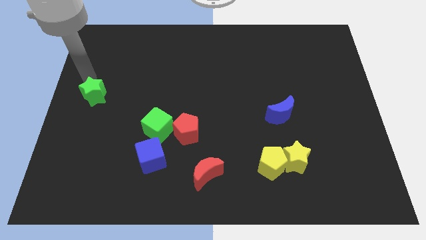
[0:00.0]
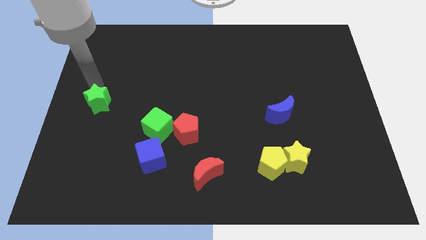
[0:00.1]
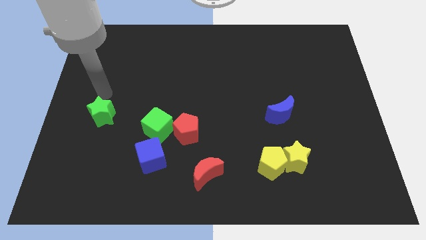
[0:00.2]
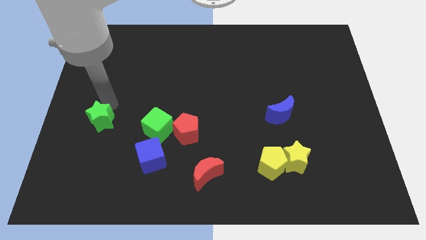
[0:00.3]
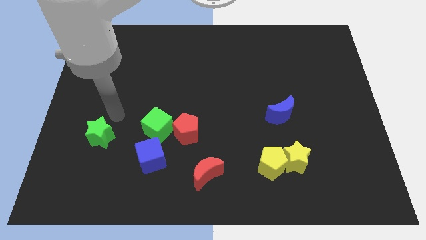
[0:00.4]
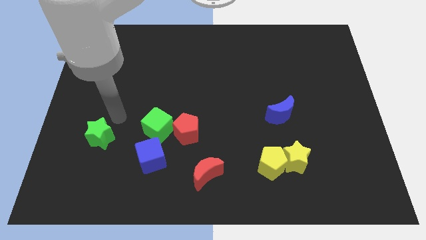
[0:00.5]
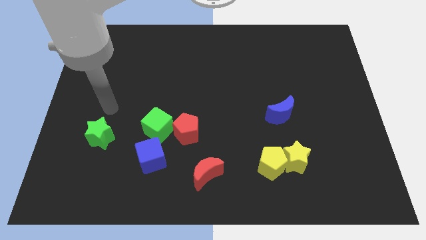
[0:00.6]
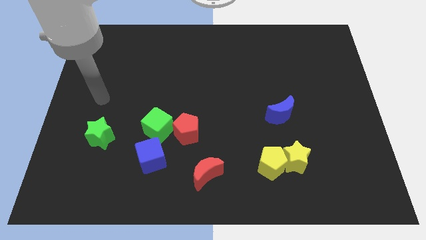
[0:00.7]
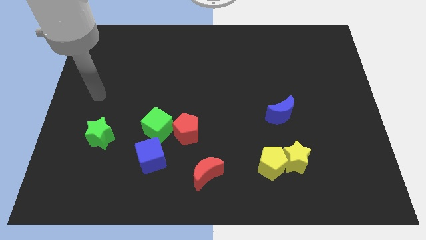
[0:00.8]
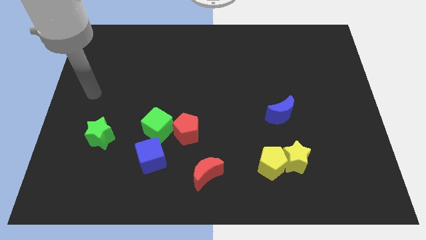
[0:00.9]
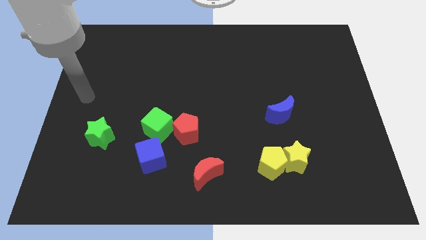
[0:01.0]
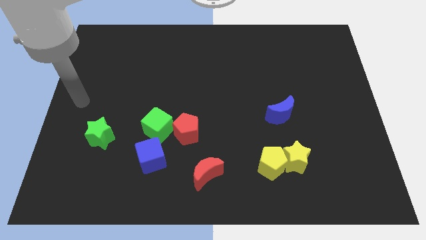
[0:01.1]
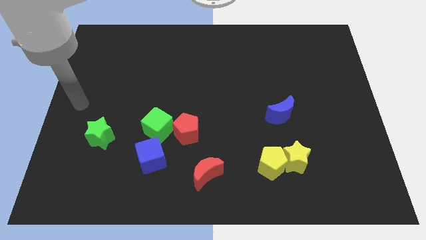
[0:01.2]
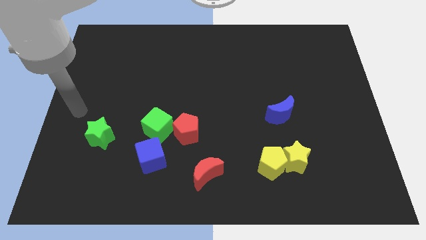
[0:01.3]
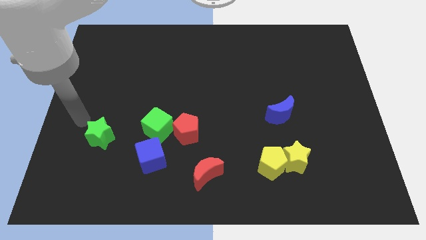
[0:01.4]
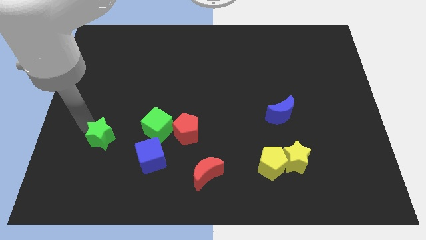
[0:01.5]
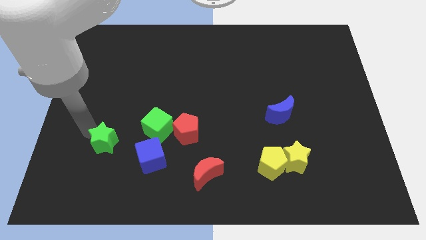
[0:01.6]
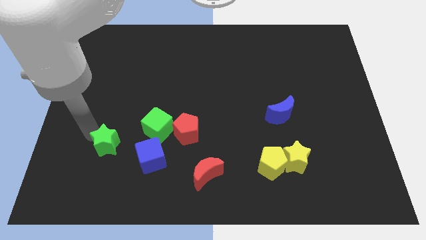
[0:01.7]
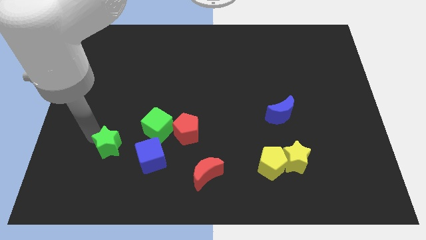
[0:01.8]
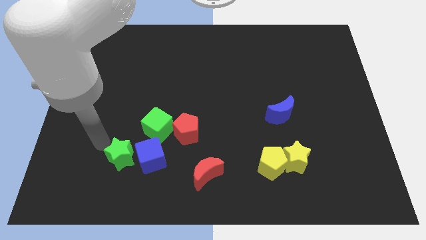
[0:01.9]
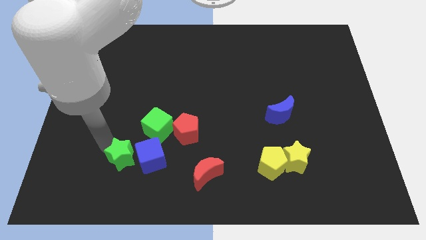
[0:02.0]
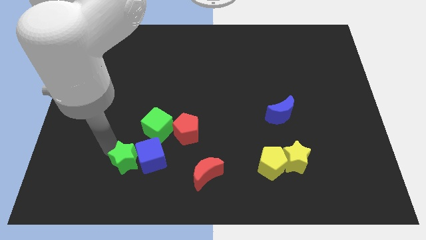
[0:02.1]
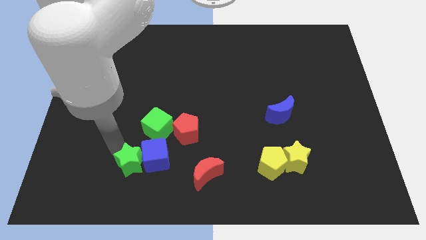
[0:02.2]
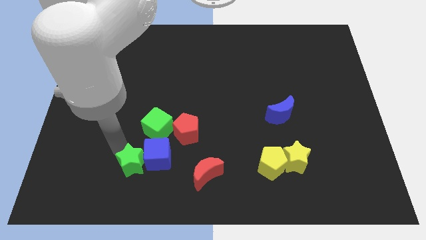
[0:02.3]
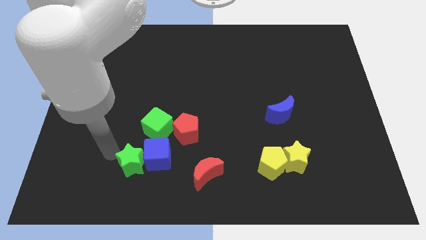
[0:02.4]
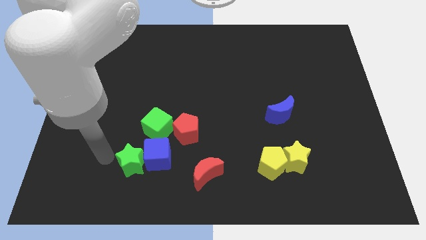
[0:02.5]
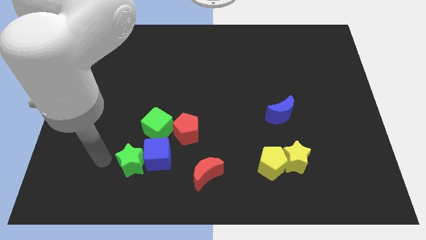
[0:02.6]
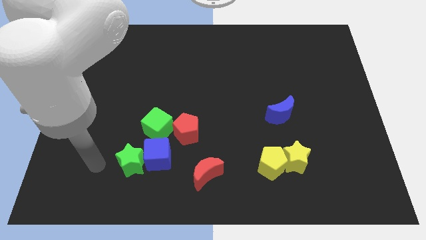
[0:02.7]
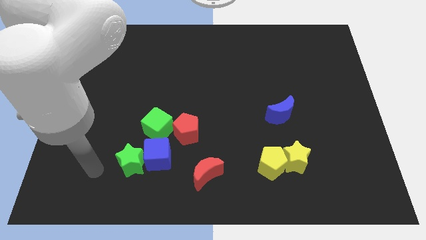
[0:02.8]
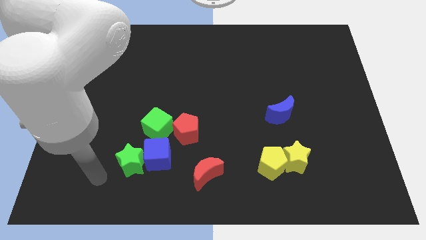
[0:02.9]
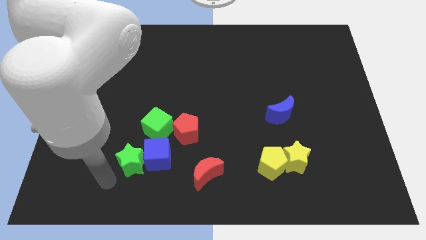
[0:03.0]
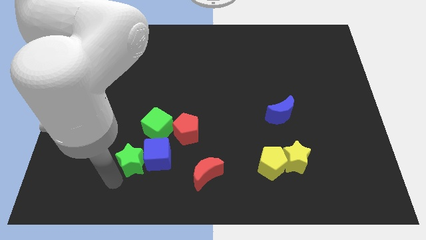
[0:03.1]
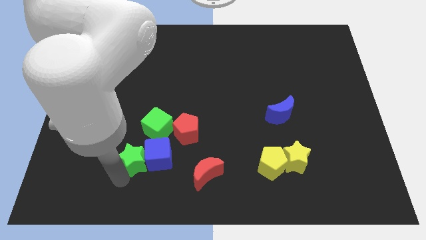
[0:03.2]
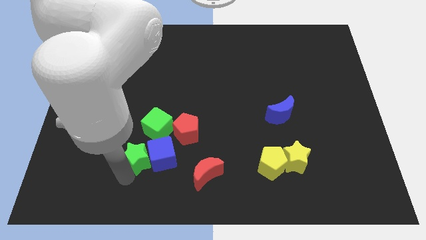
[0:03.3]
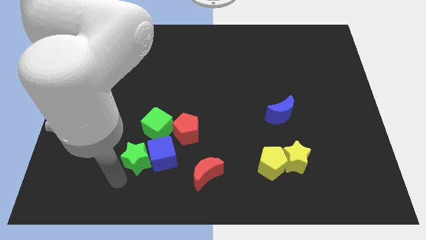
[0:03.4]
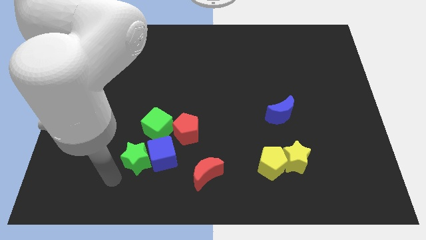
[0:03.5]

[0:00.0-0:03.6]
push the green star into the blue cube

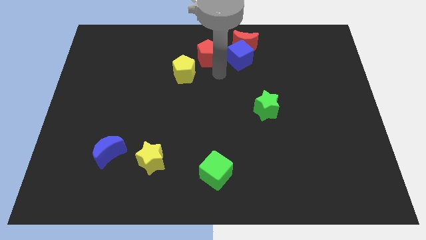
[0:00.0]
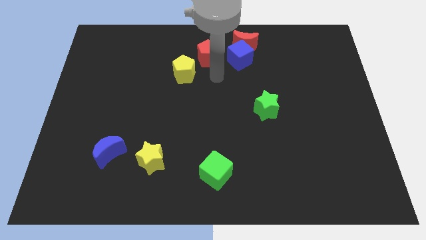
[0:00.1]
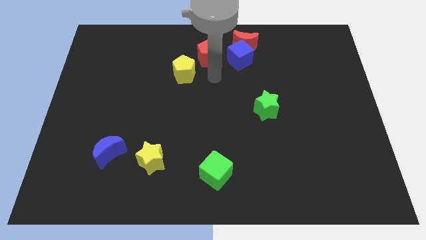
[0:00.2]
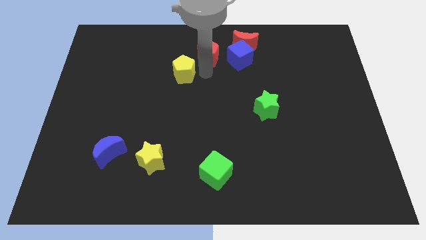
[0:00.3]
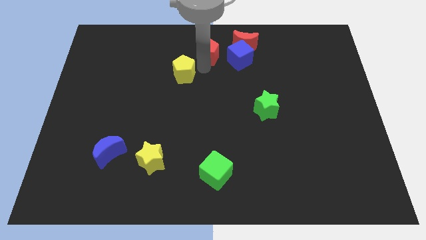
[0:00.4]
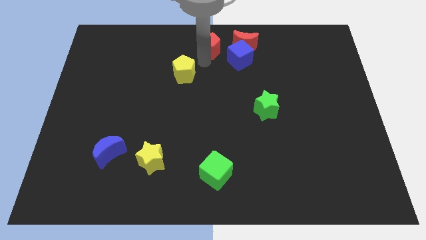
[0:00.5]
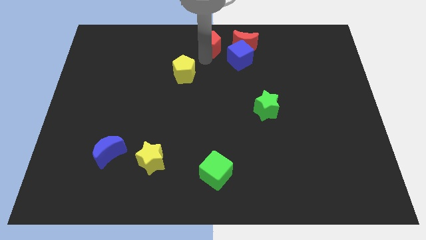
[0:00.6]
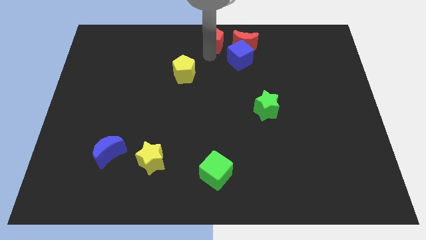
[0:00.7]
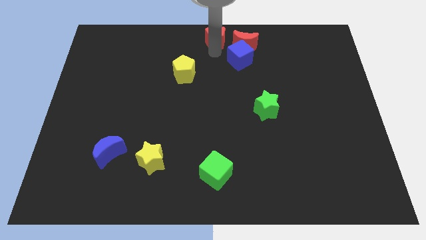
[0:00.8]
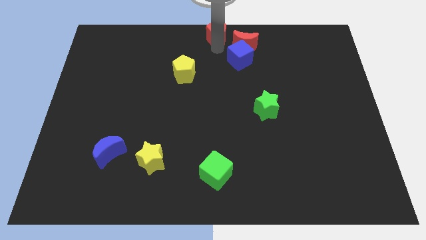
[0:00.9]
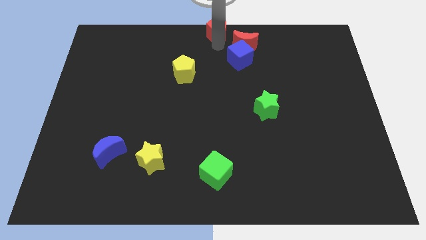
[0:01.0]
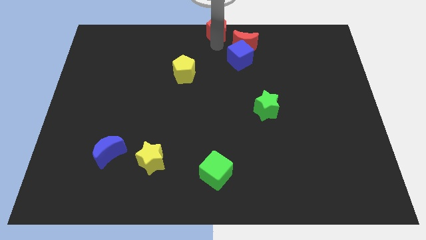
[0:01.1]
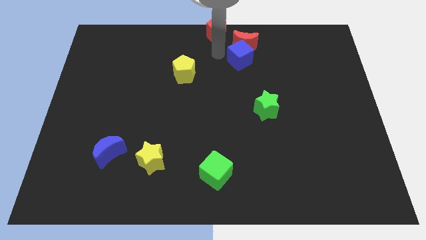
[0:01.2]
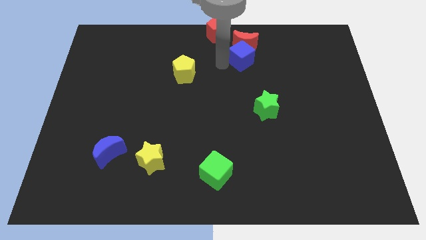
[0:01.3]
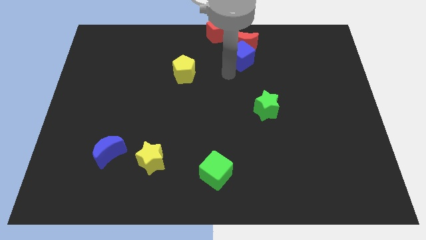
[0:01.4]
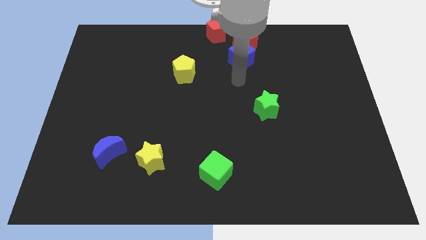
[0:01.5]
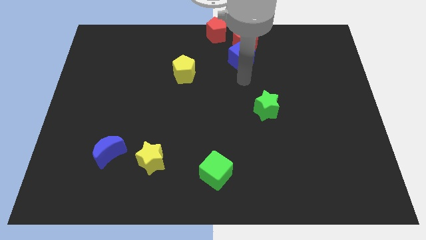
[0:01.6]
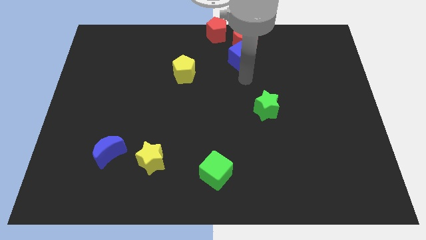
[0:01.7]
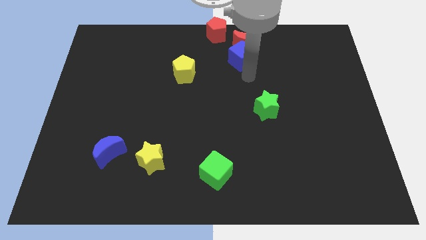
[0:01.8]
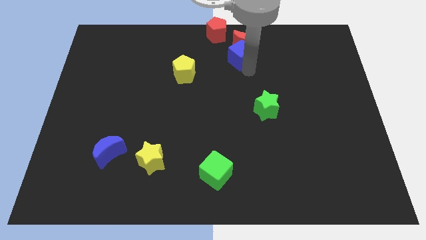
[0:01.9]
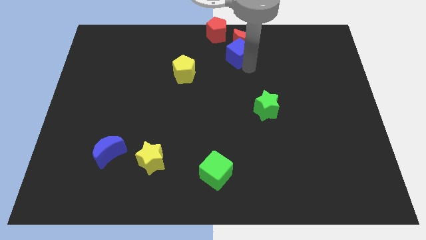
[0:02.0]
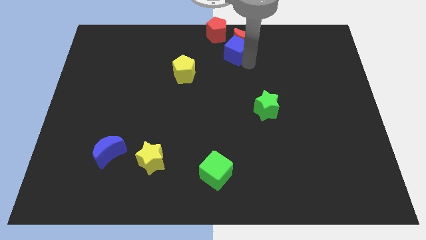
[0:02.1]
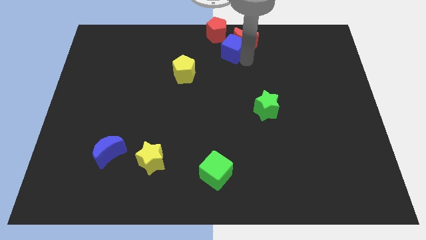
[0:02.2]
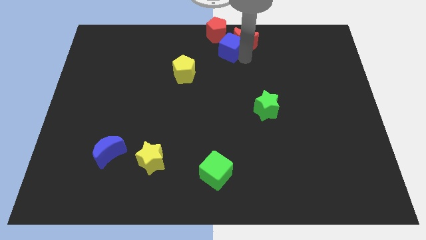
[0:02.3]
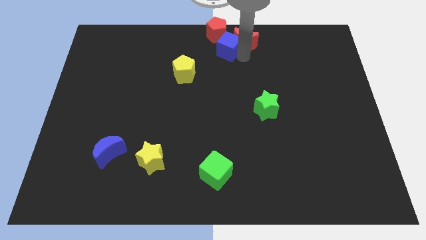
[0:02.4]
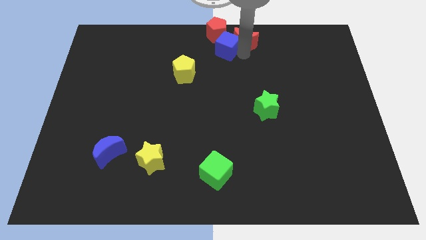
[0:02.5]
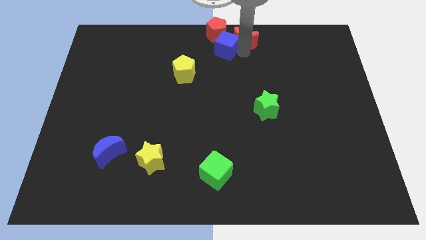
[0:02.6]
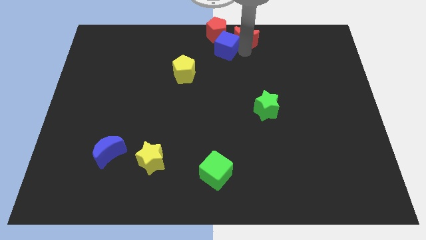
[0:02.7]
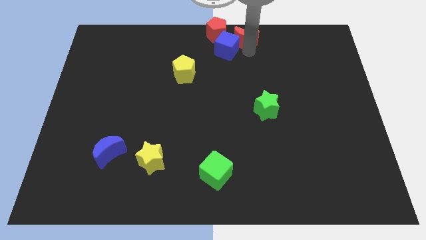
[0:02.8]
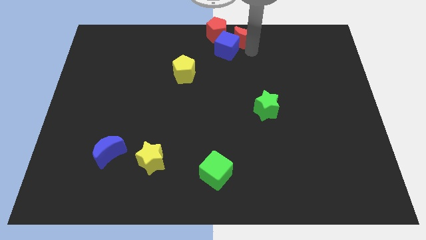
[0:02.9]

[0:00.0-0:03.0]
place the red pentagon at the top middle

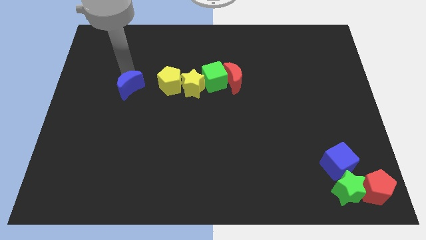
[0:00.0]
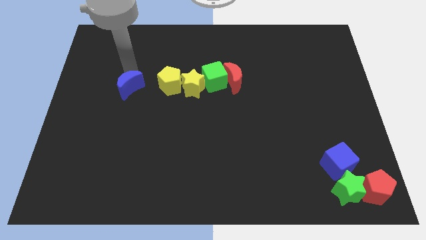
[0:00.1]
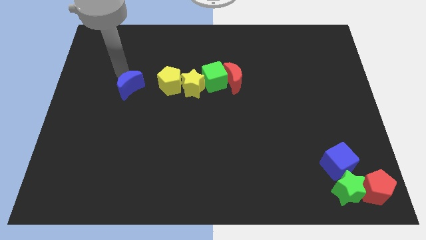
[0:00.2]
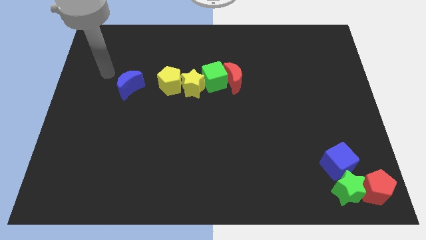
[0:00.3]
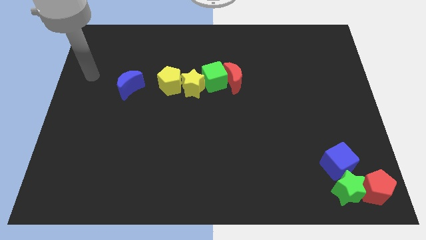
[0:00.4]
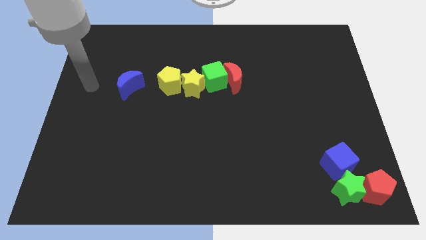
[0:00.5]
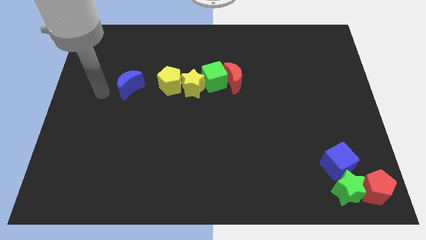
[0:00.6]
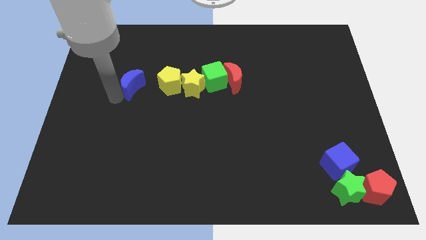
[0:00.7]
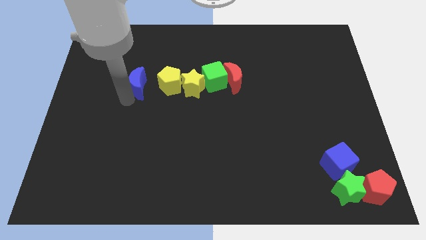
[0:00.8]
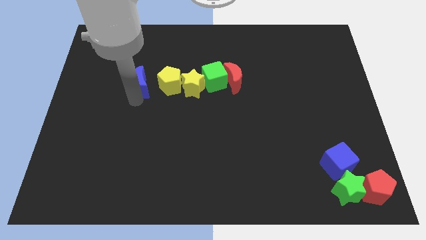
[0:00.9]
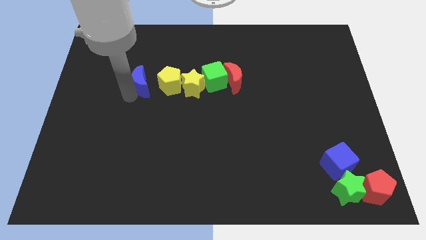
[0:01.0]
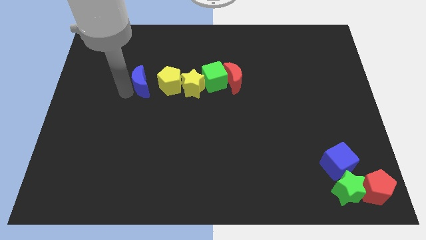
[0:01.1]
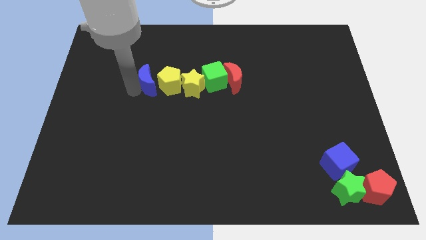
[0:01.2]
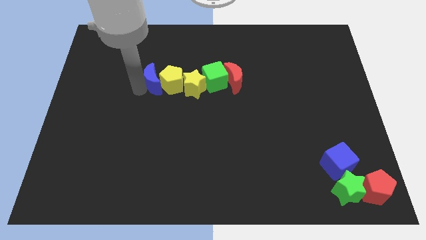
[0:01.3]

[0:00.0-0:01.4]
push the blue crescent horizontal to the left to the yellow pentagon

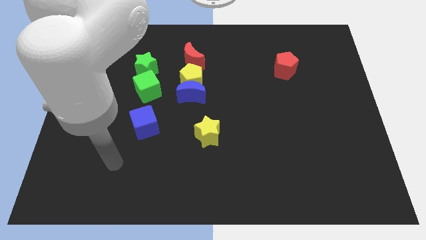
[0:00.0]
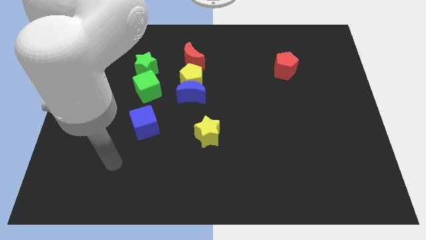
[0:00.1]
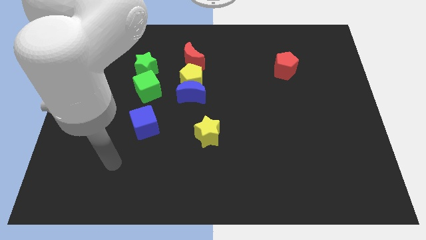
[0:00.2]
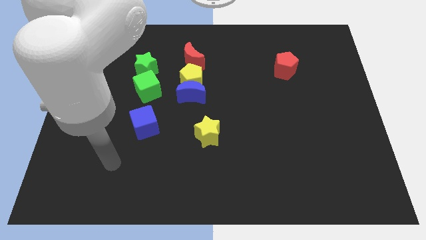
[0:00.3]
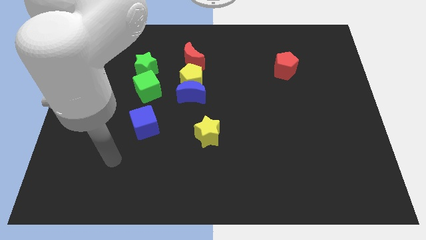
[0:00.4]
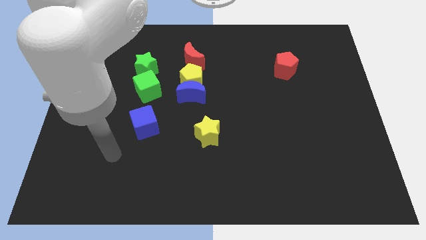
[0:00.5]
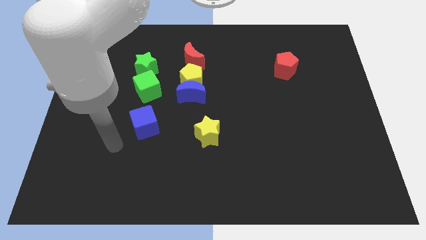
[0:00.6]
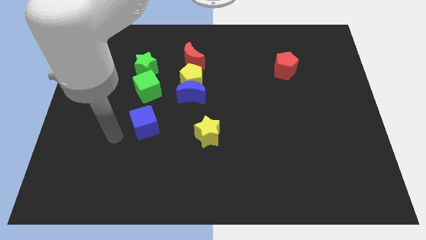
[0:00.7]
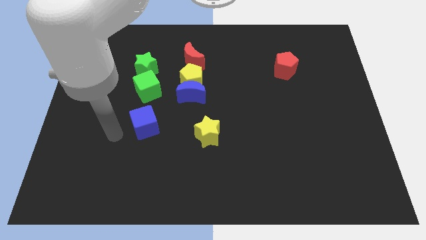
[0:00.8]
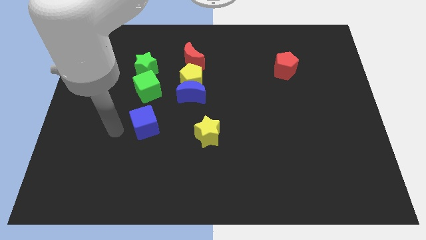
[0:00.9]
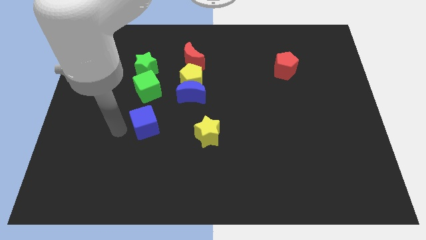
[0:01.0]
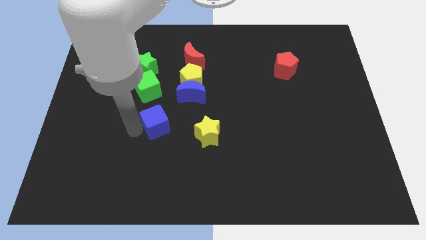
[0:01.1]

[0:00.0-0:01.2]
push the blue cube slightly to the right side of the board
